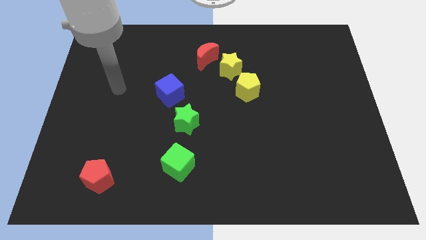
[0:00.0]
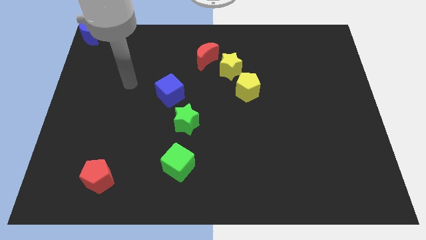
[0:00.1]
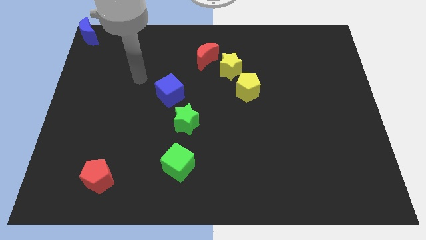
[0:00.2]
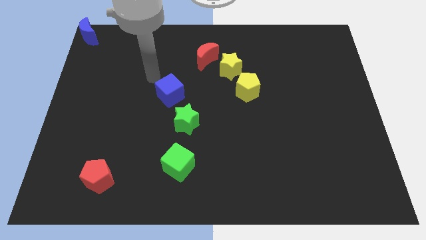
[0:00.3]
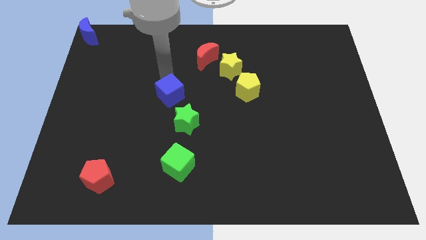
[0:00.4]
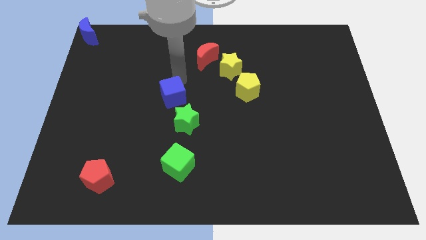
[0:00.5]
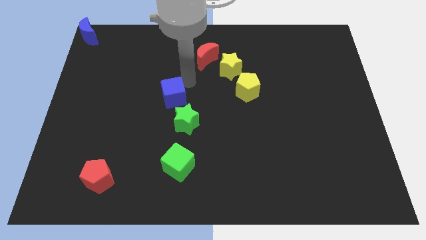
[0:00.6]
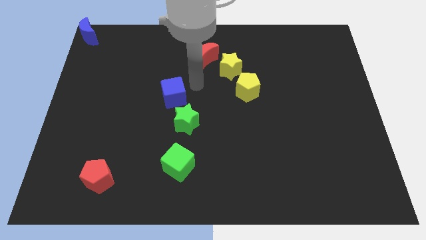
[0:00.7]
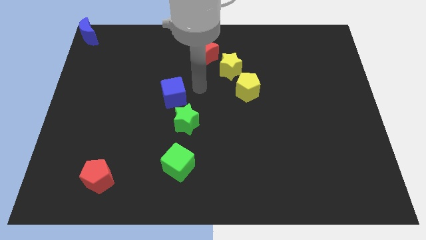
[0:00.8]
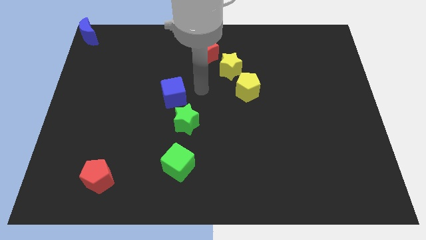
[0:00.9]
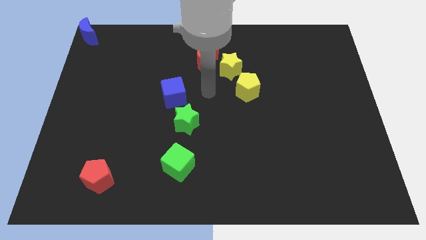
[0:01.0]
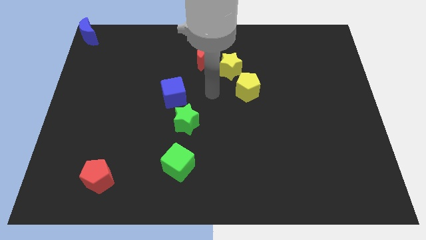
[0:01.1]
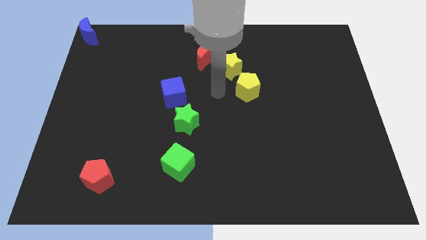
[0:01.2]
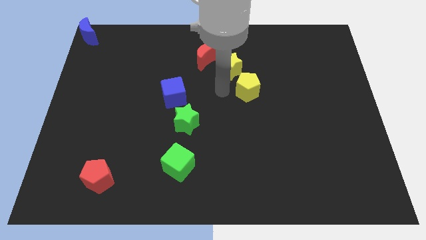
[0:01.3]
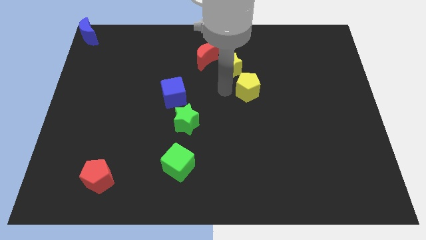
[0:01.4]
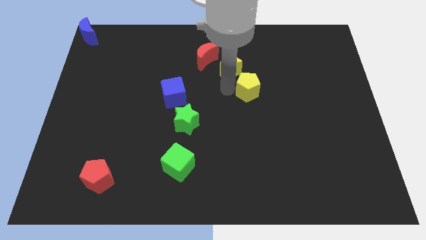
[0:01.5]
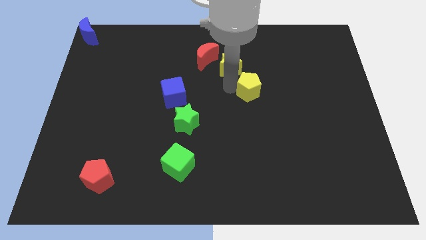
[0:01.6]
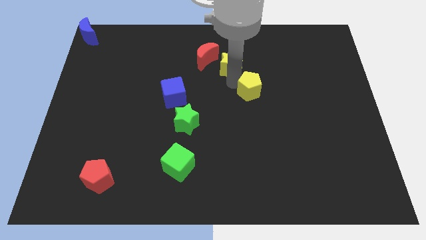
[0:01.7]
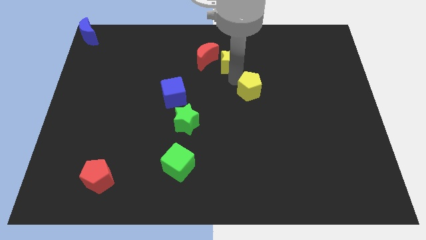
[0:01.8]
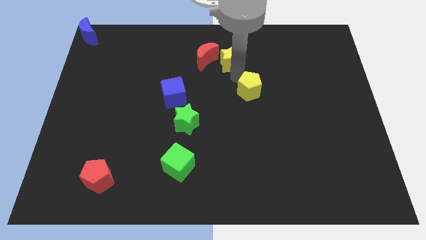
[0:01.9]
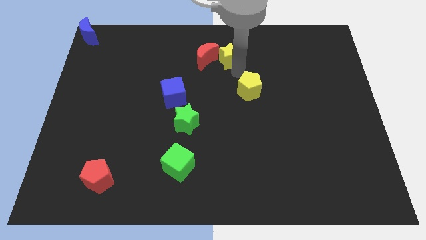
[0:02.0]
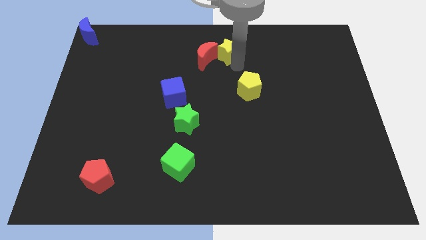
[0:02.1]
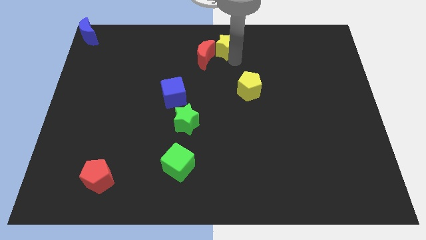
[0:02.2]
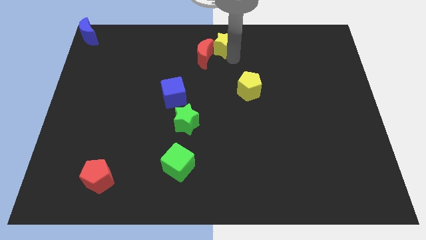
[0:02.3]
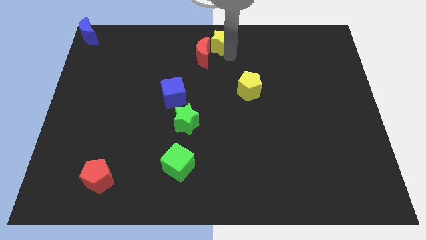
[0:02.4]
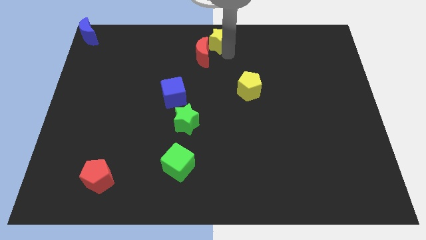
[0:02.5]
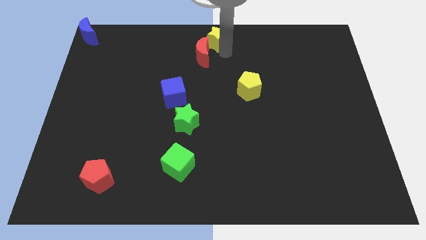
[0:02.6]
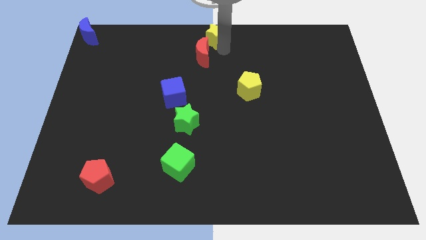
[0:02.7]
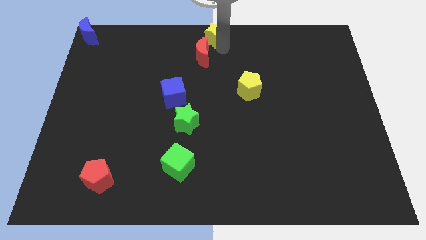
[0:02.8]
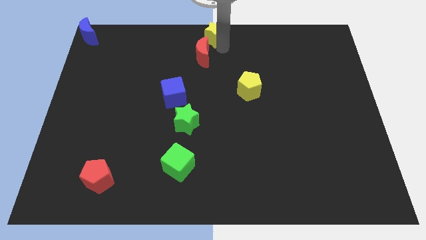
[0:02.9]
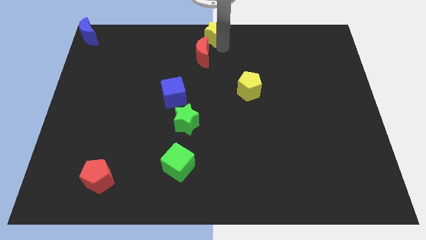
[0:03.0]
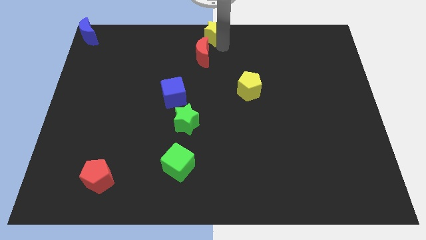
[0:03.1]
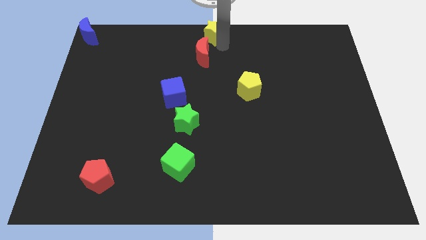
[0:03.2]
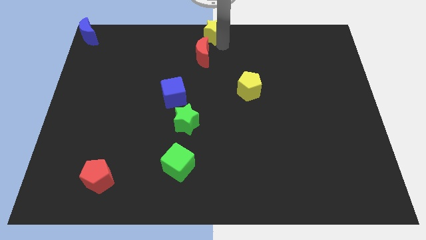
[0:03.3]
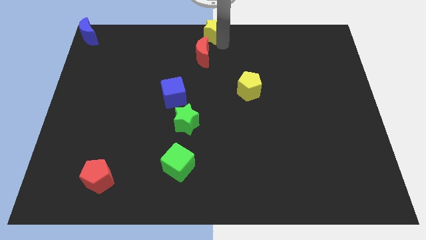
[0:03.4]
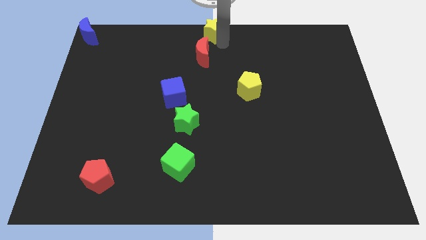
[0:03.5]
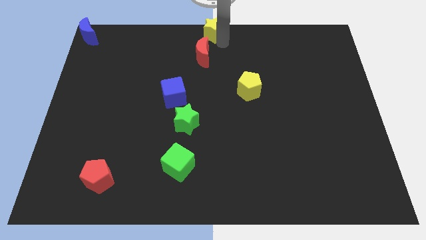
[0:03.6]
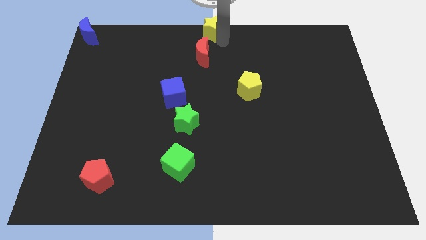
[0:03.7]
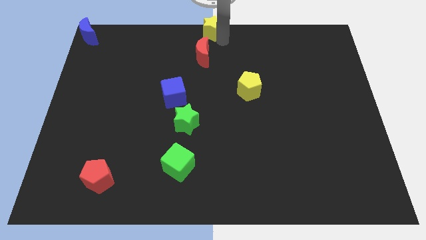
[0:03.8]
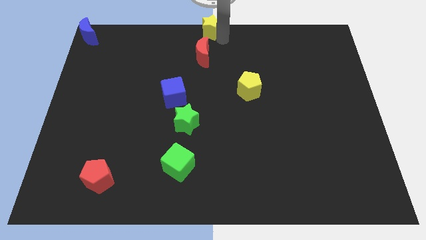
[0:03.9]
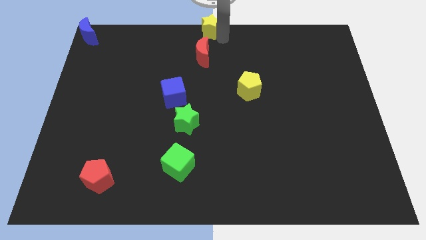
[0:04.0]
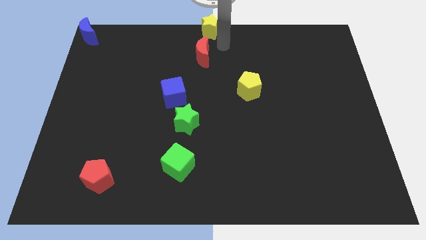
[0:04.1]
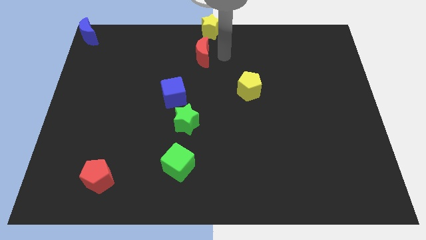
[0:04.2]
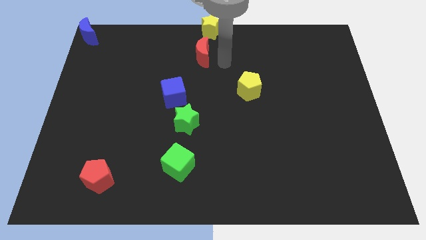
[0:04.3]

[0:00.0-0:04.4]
move the yellow star at the top center of the board

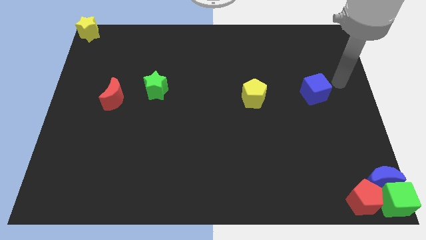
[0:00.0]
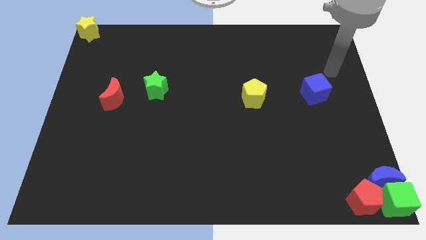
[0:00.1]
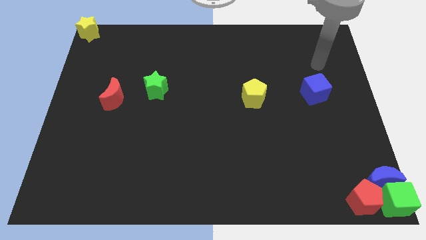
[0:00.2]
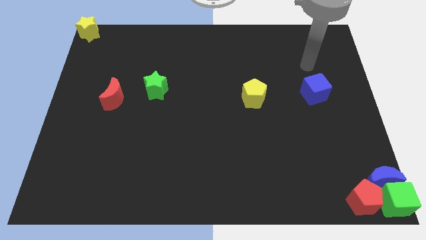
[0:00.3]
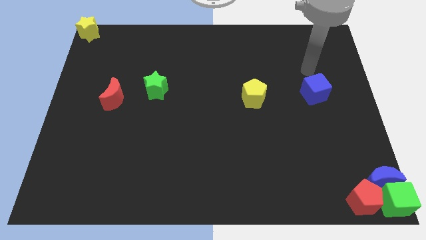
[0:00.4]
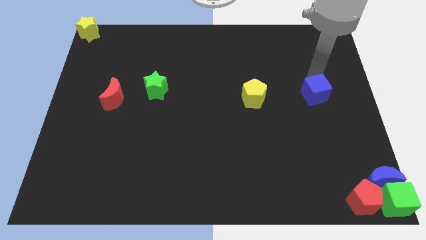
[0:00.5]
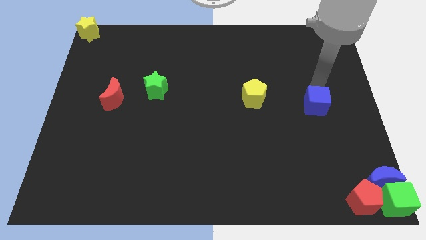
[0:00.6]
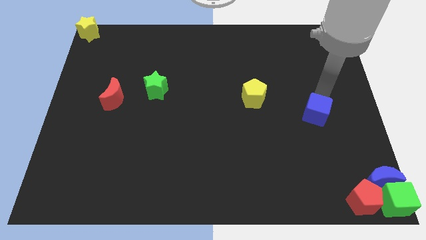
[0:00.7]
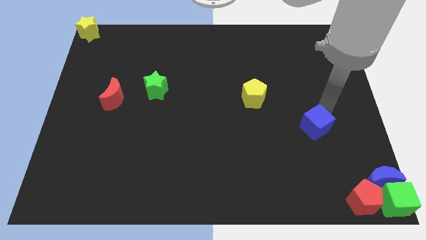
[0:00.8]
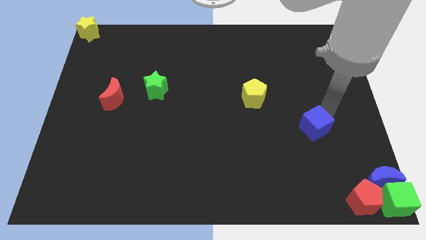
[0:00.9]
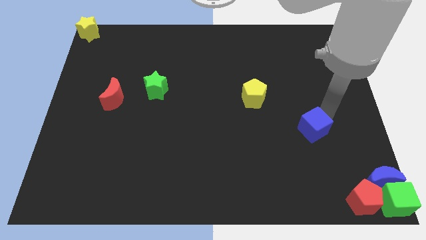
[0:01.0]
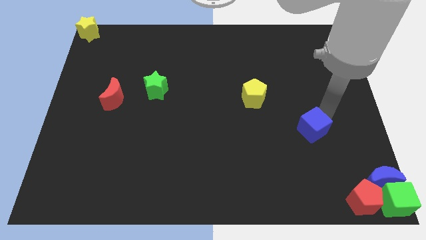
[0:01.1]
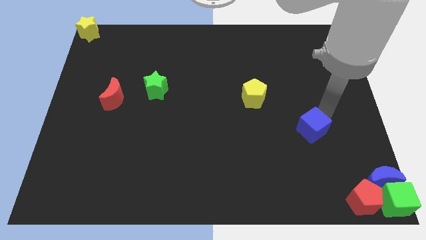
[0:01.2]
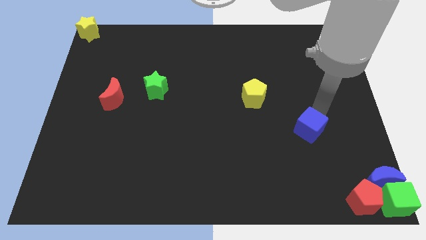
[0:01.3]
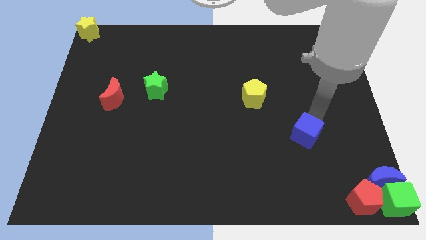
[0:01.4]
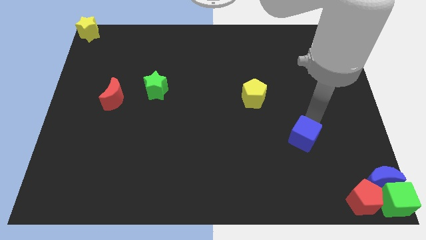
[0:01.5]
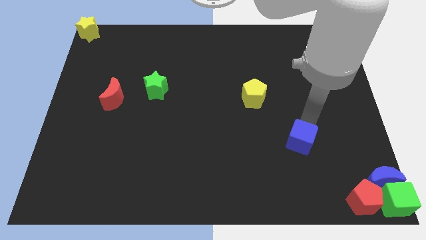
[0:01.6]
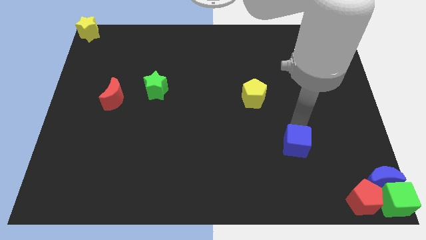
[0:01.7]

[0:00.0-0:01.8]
push the blue cube downward

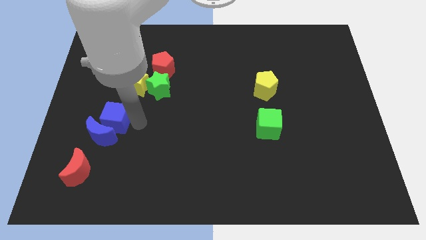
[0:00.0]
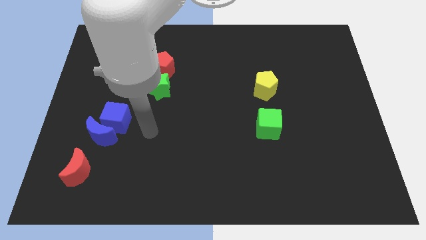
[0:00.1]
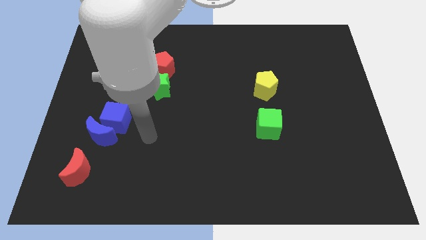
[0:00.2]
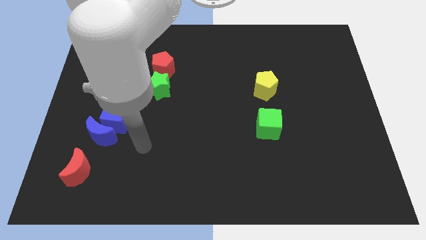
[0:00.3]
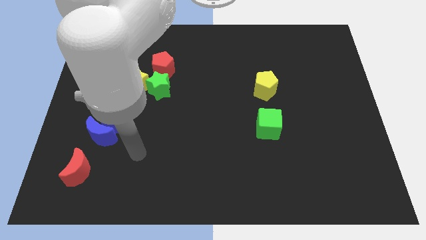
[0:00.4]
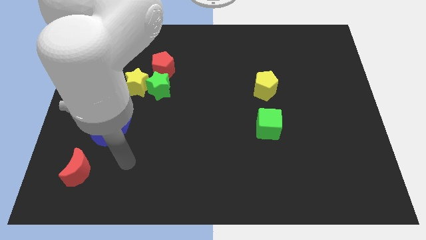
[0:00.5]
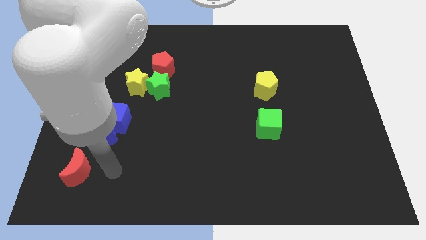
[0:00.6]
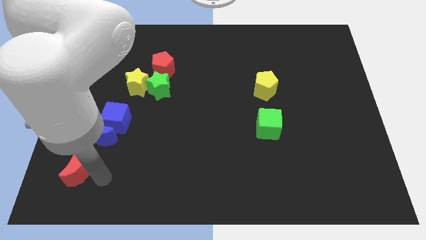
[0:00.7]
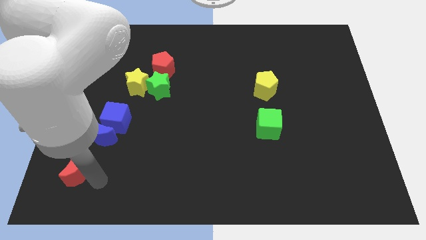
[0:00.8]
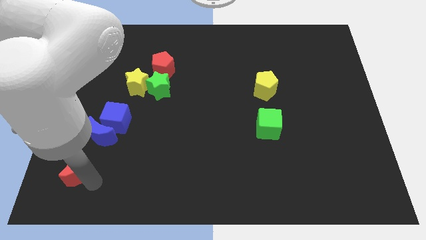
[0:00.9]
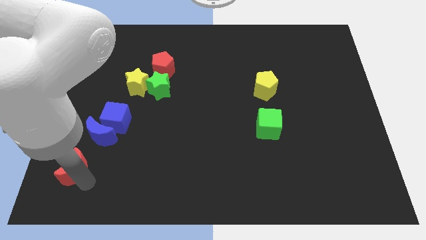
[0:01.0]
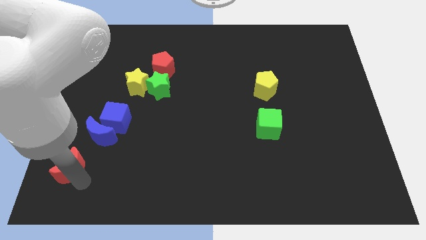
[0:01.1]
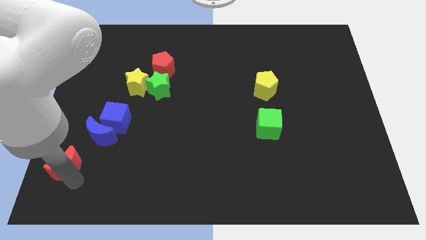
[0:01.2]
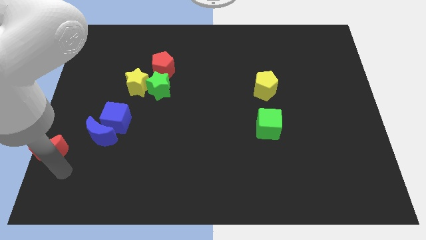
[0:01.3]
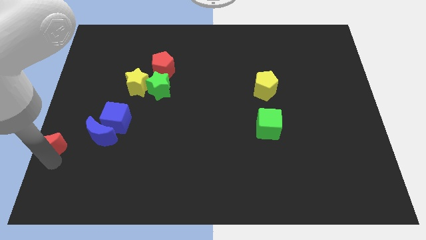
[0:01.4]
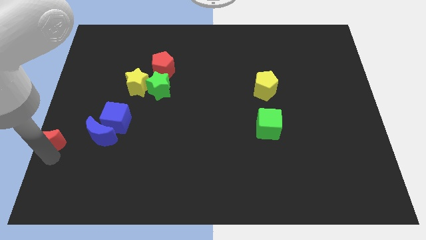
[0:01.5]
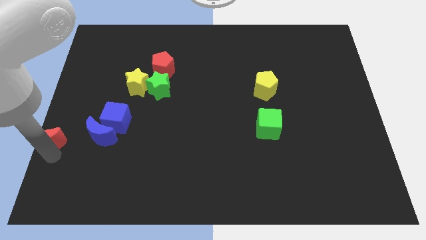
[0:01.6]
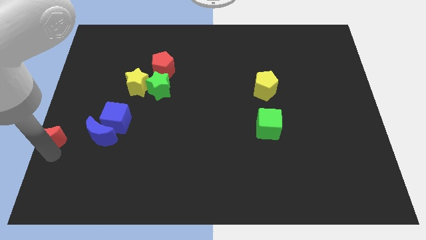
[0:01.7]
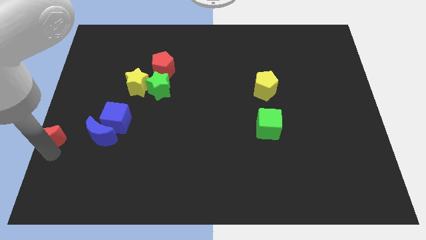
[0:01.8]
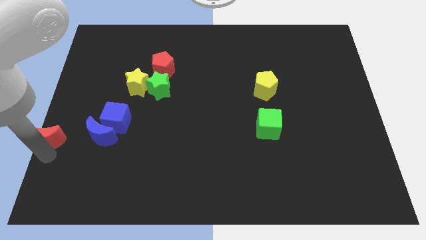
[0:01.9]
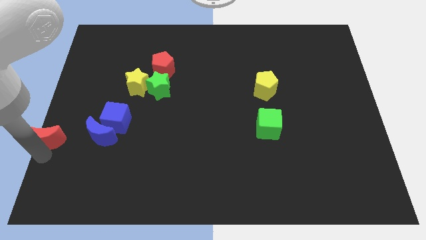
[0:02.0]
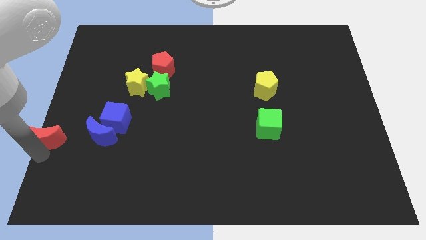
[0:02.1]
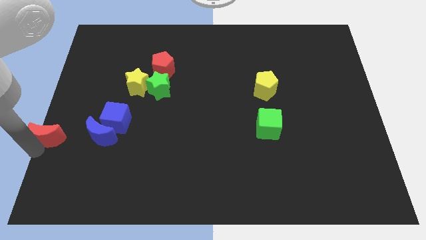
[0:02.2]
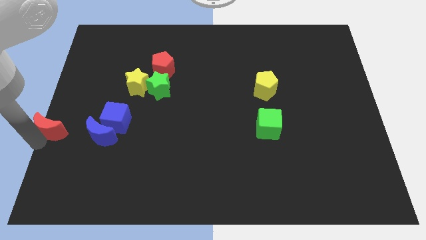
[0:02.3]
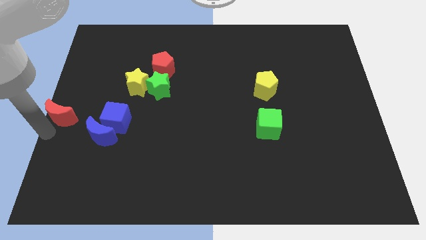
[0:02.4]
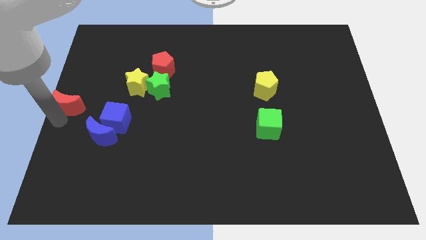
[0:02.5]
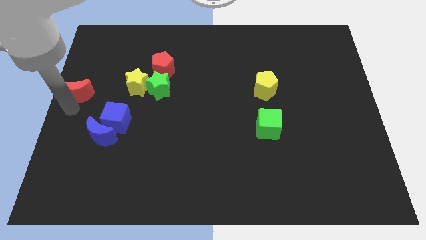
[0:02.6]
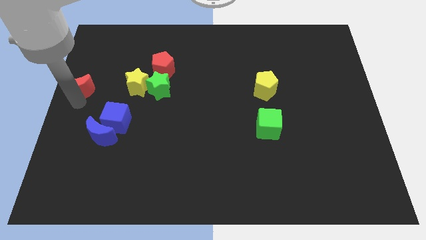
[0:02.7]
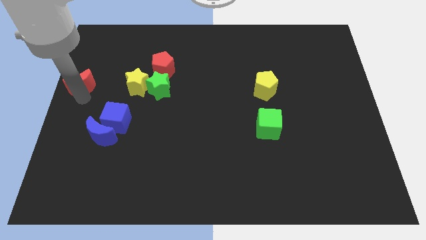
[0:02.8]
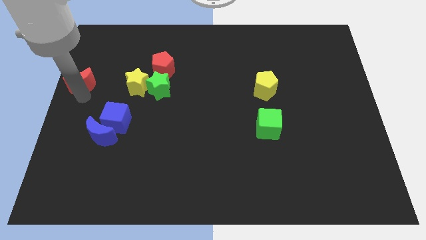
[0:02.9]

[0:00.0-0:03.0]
place the red moon parallel to yellow star
